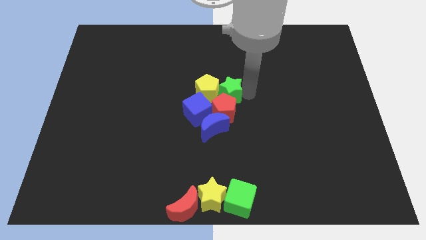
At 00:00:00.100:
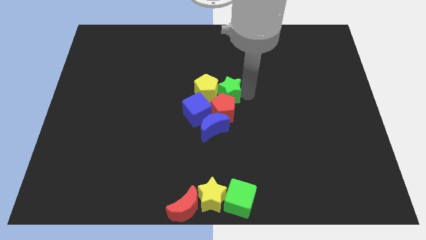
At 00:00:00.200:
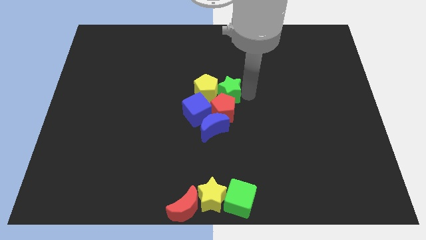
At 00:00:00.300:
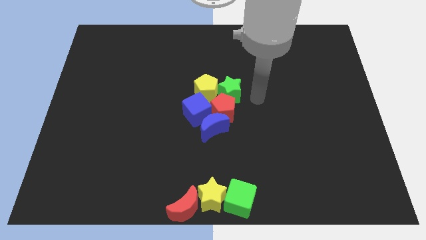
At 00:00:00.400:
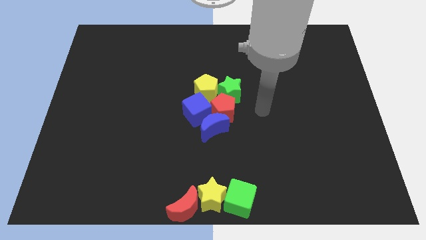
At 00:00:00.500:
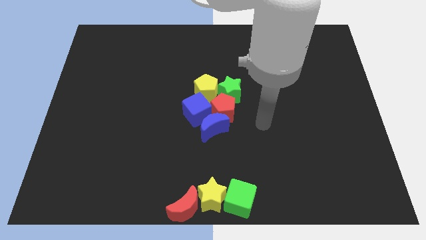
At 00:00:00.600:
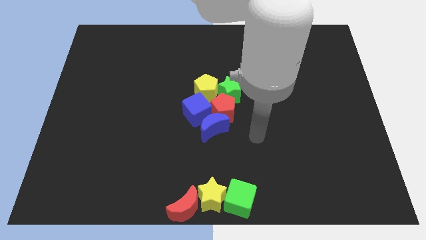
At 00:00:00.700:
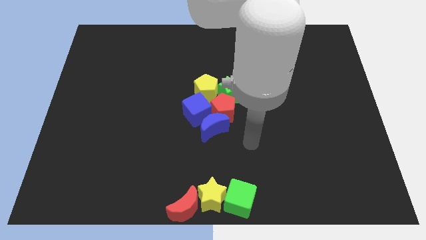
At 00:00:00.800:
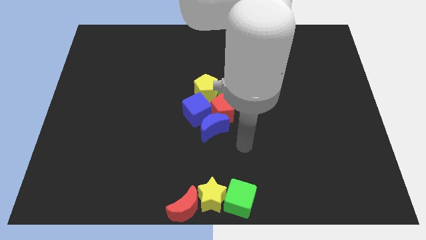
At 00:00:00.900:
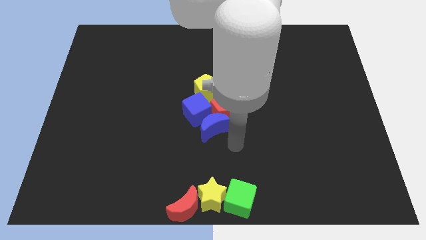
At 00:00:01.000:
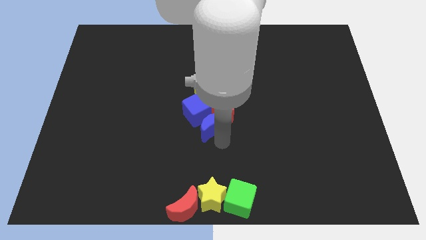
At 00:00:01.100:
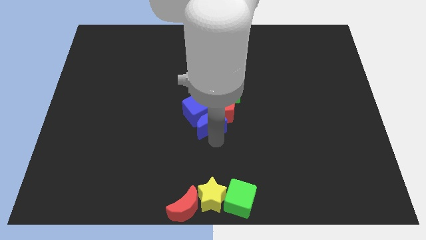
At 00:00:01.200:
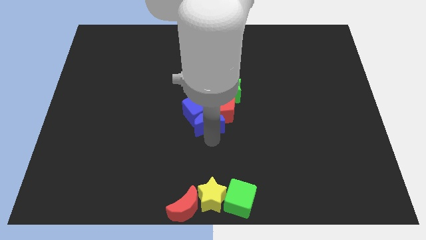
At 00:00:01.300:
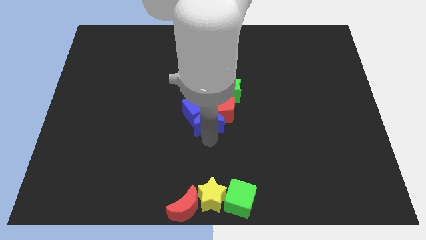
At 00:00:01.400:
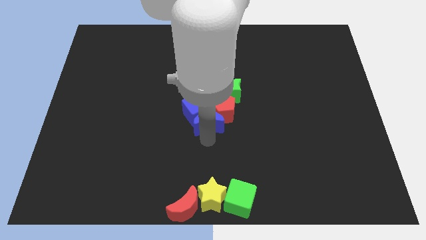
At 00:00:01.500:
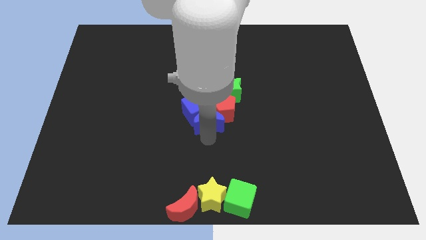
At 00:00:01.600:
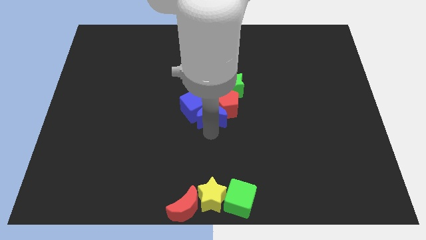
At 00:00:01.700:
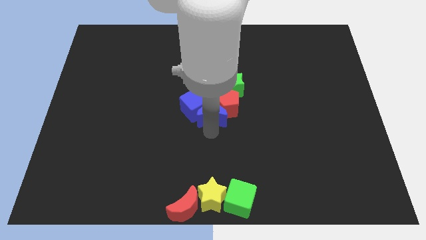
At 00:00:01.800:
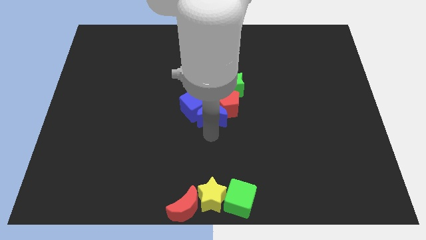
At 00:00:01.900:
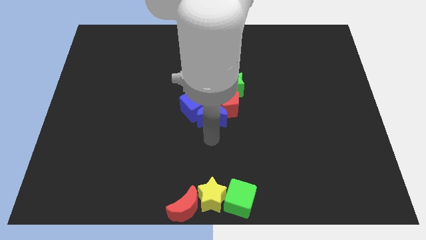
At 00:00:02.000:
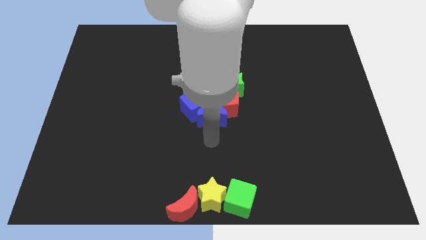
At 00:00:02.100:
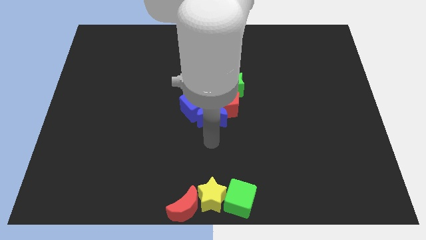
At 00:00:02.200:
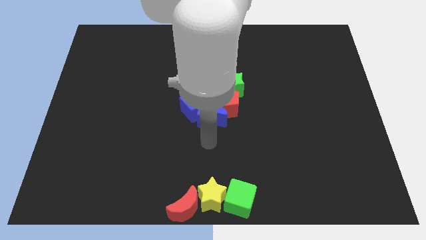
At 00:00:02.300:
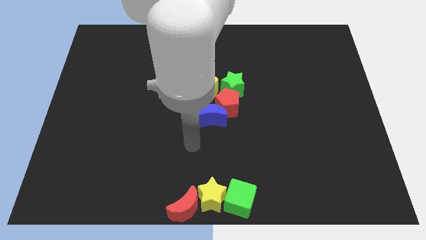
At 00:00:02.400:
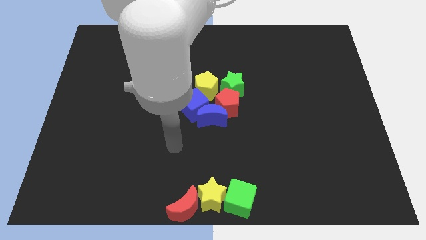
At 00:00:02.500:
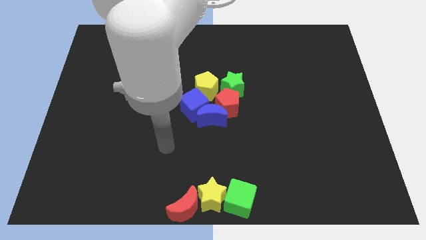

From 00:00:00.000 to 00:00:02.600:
make a group of red pentagongreen staryellow pentagonblue cube and blue moon

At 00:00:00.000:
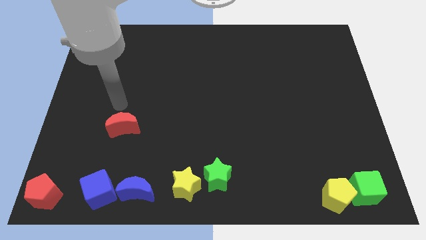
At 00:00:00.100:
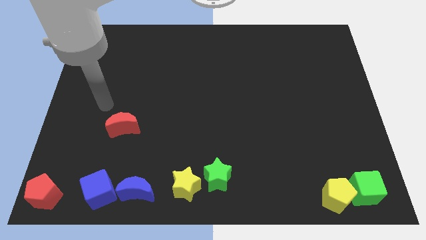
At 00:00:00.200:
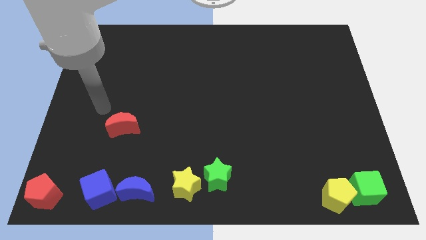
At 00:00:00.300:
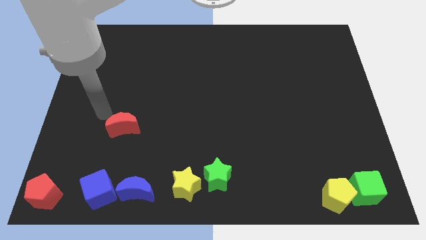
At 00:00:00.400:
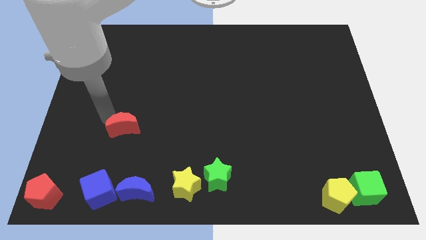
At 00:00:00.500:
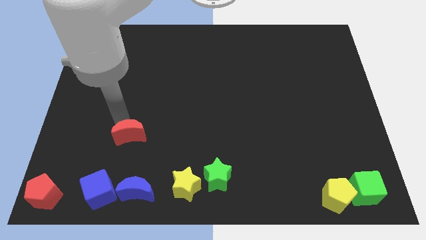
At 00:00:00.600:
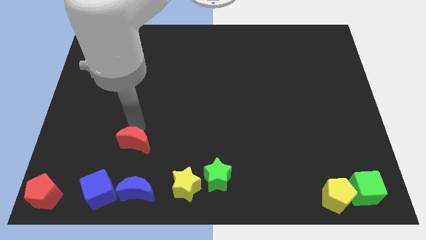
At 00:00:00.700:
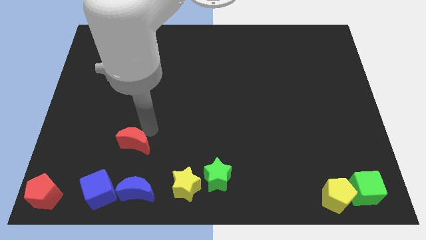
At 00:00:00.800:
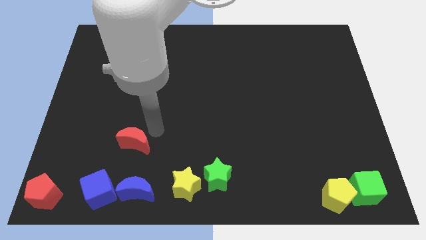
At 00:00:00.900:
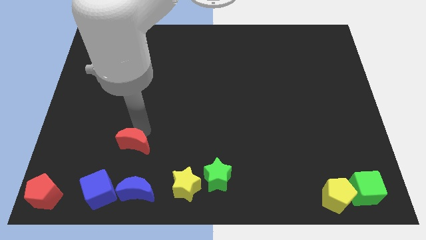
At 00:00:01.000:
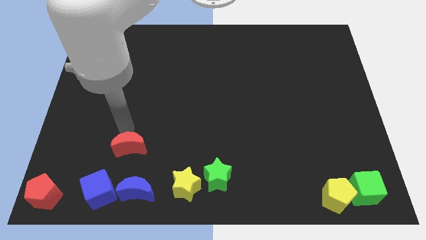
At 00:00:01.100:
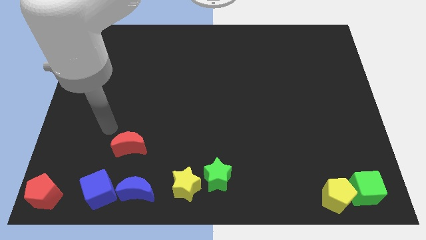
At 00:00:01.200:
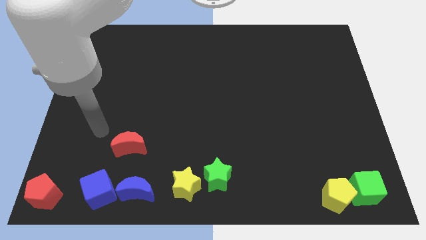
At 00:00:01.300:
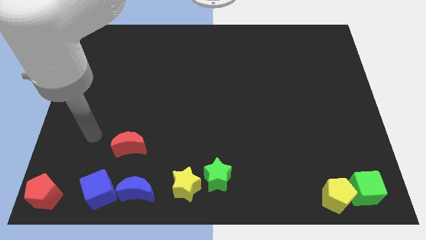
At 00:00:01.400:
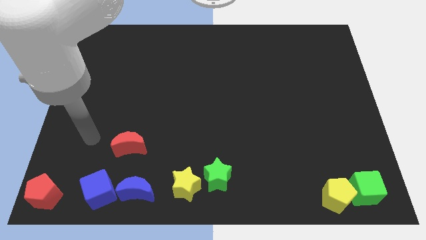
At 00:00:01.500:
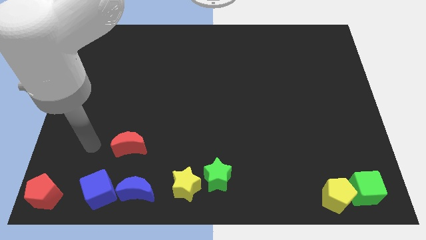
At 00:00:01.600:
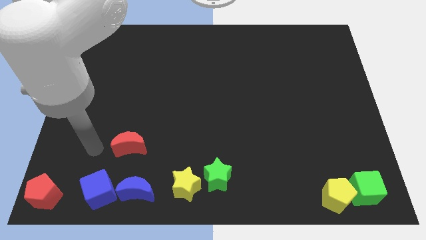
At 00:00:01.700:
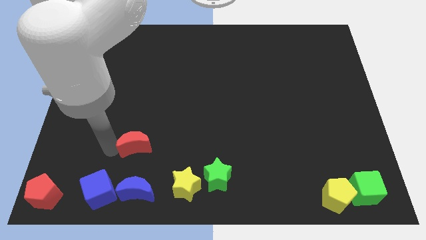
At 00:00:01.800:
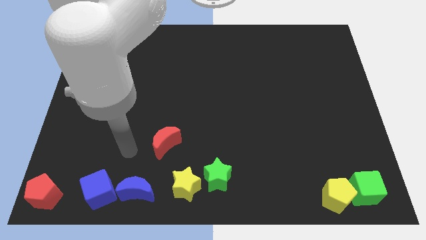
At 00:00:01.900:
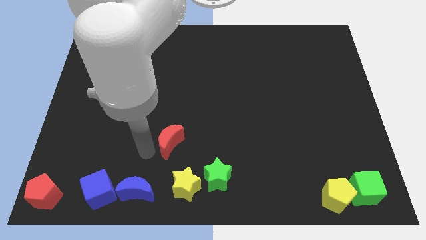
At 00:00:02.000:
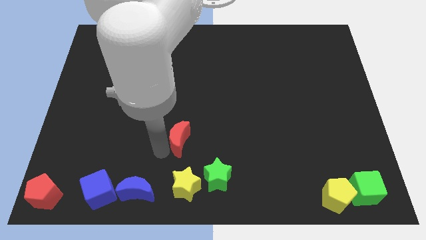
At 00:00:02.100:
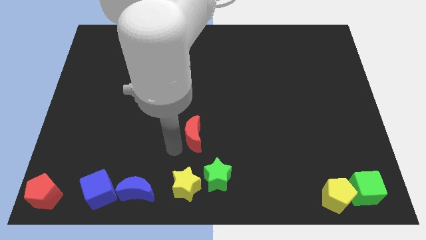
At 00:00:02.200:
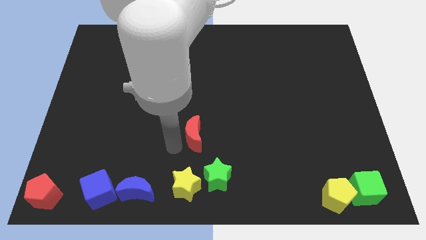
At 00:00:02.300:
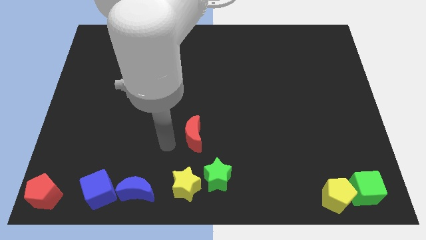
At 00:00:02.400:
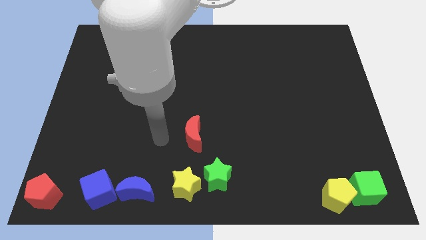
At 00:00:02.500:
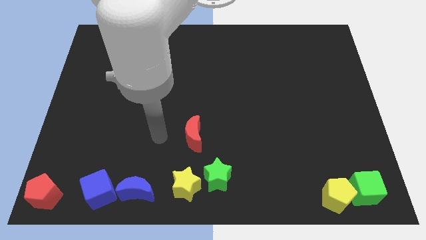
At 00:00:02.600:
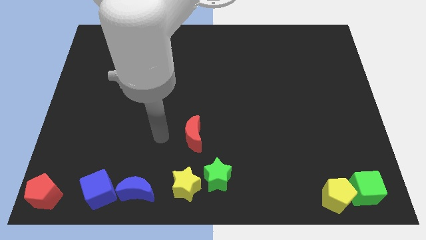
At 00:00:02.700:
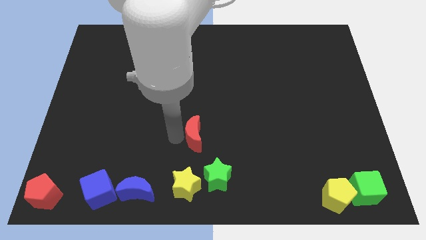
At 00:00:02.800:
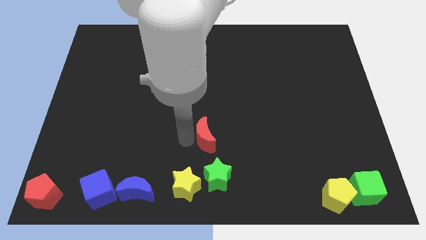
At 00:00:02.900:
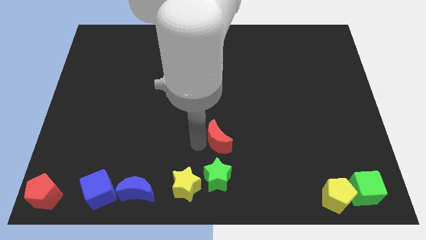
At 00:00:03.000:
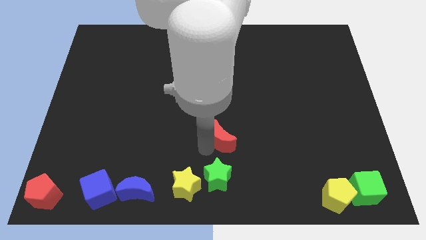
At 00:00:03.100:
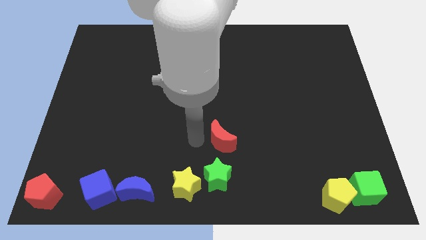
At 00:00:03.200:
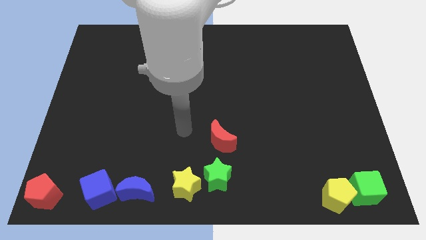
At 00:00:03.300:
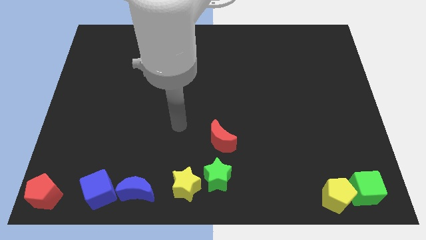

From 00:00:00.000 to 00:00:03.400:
put the red crescent above the green star

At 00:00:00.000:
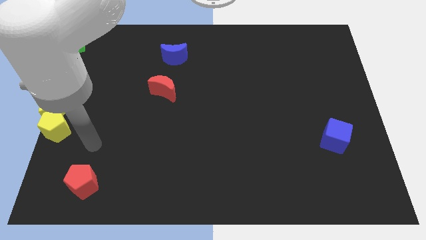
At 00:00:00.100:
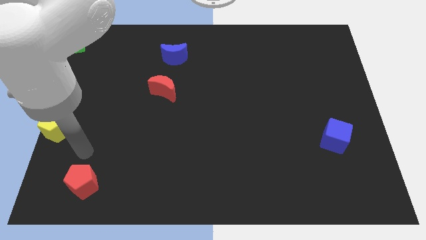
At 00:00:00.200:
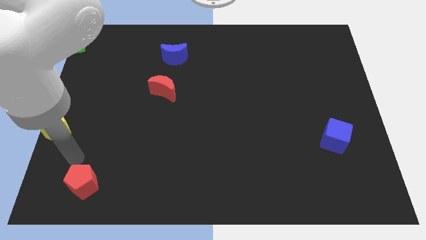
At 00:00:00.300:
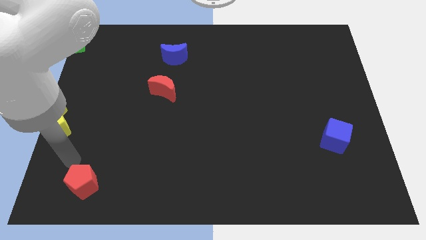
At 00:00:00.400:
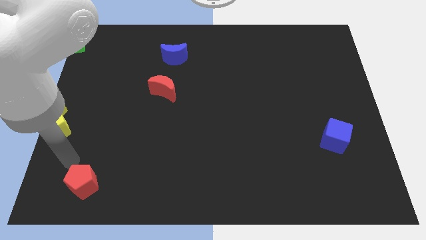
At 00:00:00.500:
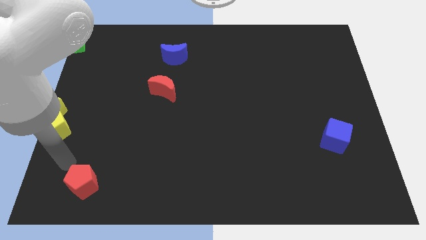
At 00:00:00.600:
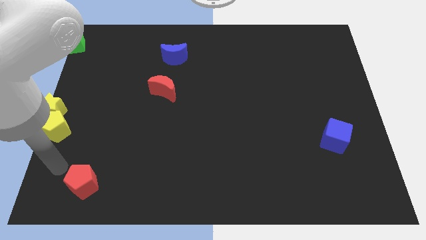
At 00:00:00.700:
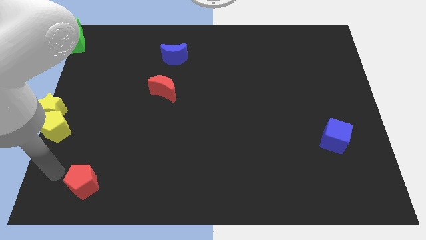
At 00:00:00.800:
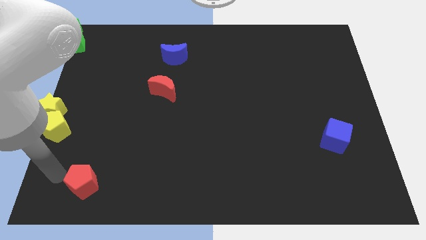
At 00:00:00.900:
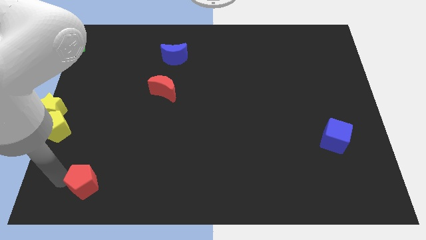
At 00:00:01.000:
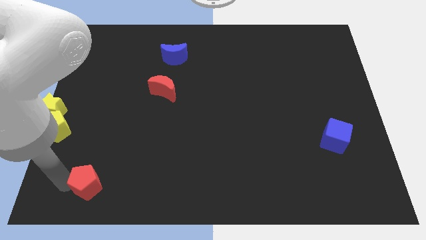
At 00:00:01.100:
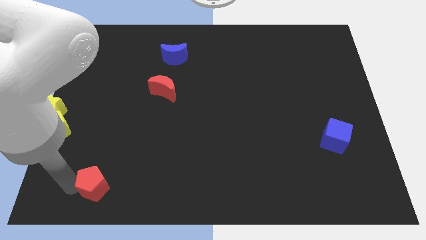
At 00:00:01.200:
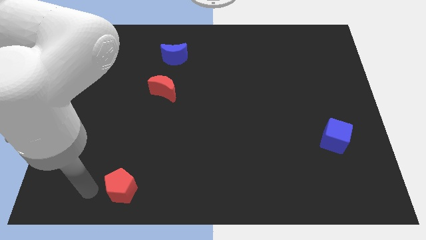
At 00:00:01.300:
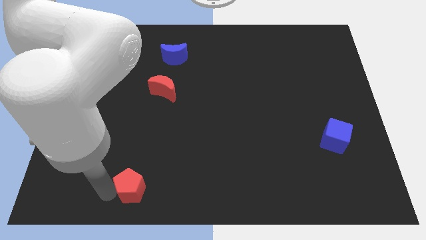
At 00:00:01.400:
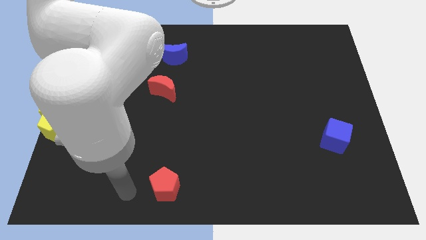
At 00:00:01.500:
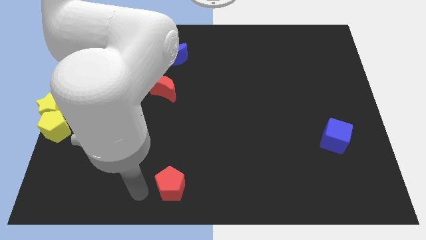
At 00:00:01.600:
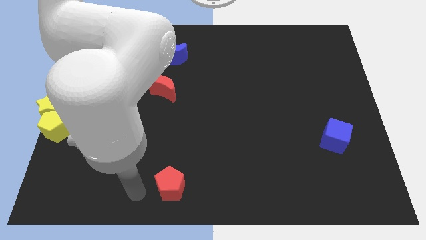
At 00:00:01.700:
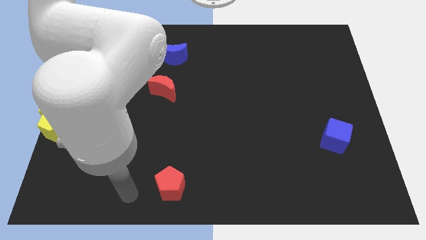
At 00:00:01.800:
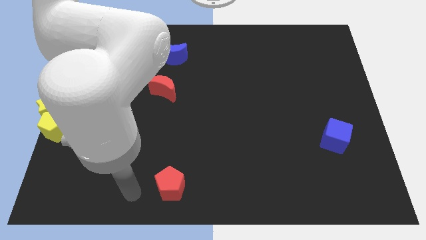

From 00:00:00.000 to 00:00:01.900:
move the red pentagon slightly to the right

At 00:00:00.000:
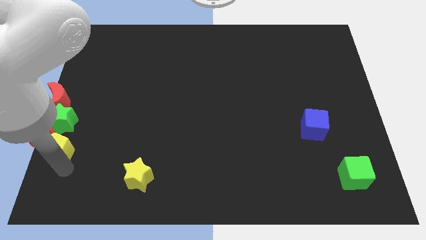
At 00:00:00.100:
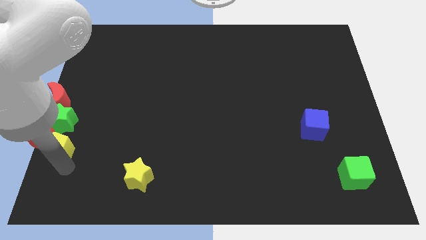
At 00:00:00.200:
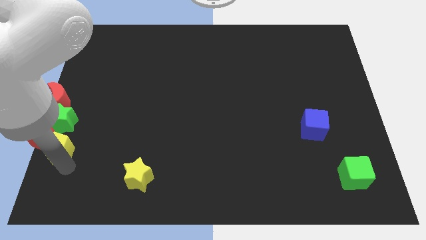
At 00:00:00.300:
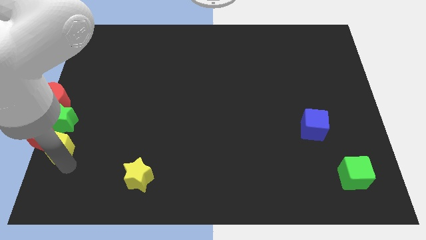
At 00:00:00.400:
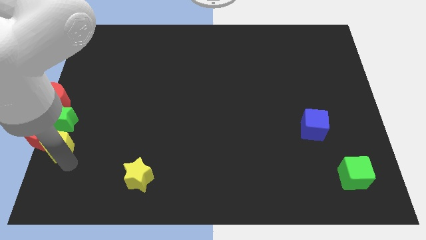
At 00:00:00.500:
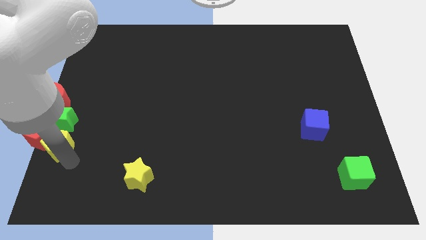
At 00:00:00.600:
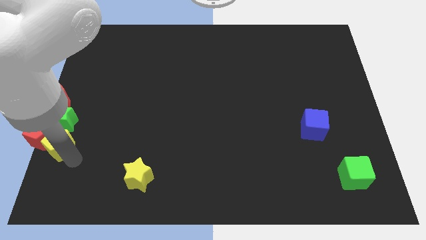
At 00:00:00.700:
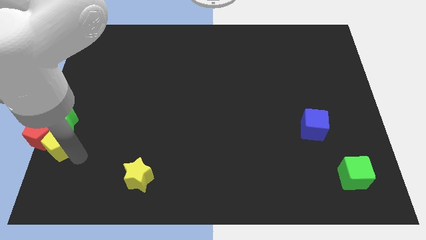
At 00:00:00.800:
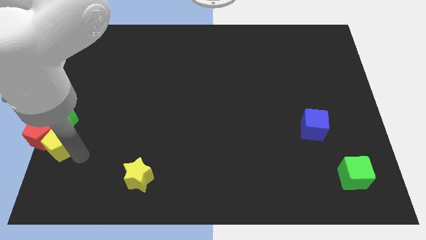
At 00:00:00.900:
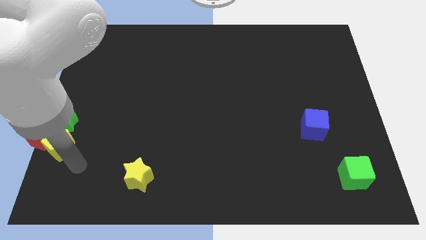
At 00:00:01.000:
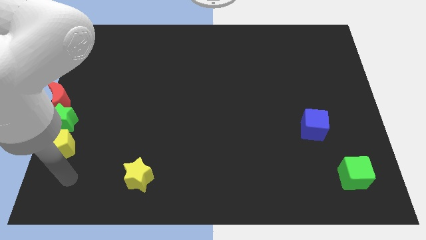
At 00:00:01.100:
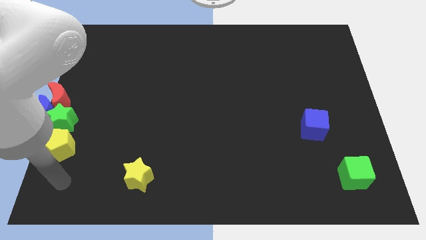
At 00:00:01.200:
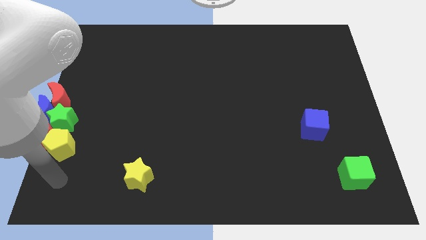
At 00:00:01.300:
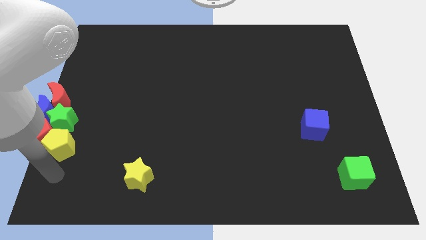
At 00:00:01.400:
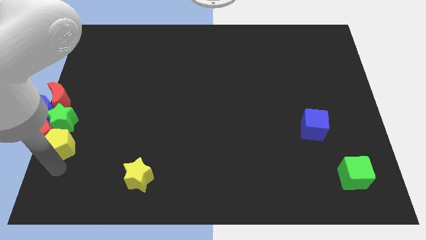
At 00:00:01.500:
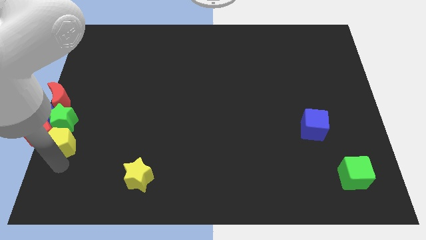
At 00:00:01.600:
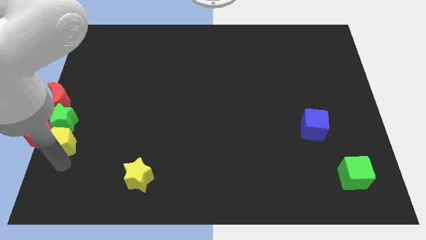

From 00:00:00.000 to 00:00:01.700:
move the yellow pentagon below the green star
